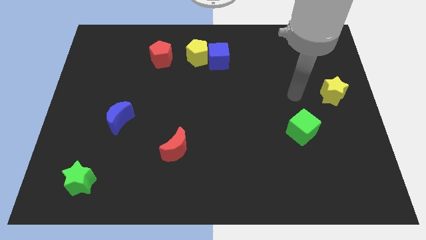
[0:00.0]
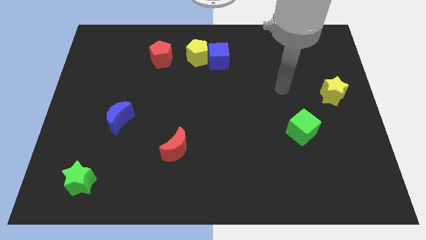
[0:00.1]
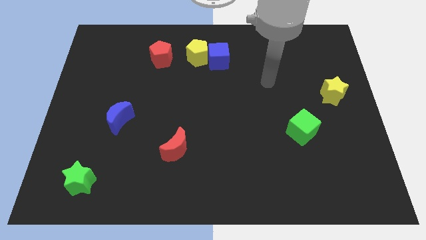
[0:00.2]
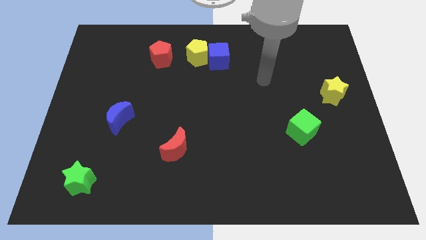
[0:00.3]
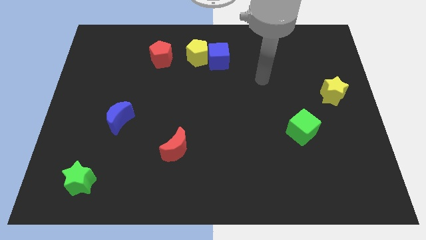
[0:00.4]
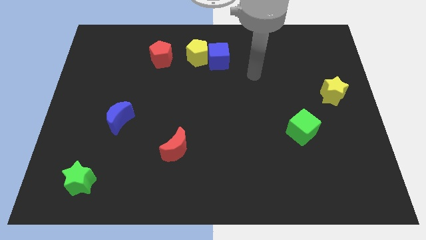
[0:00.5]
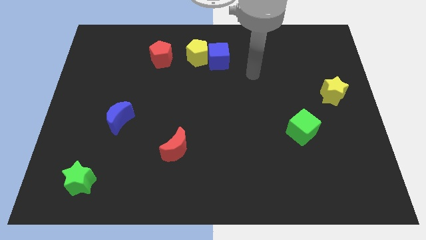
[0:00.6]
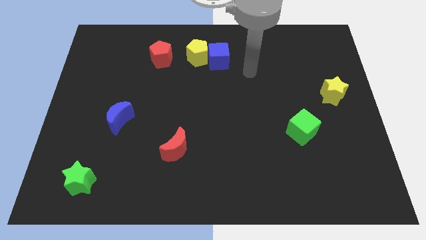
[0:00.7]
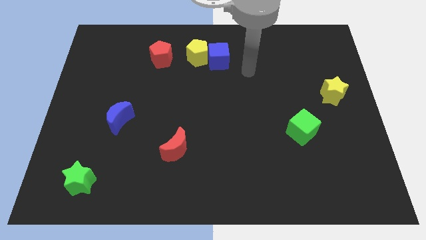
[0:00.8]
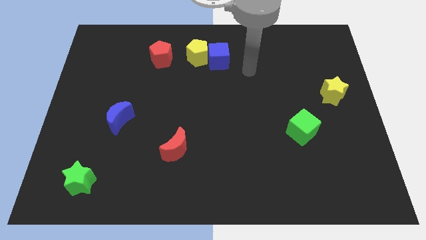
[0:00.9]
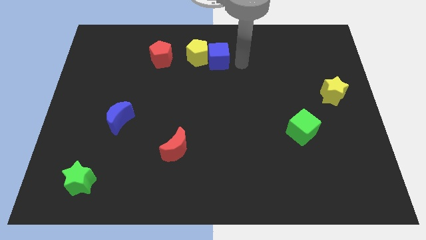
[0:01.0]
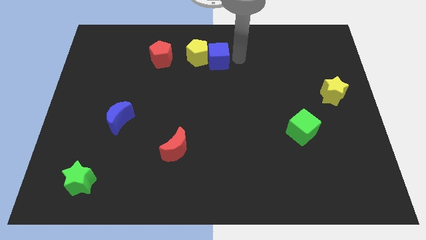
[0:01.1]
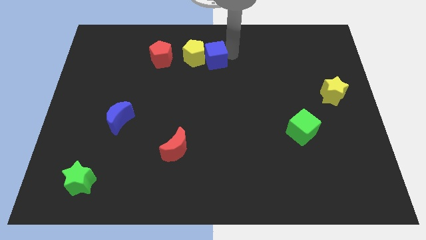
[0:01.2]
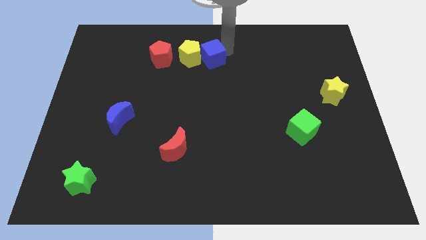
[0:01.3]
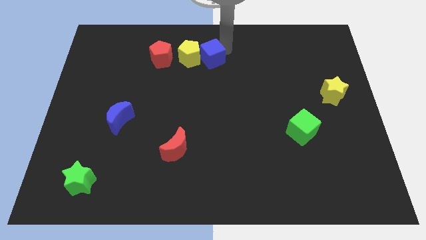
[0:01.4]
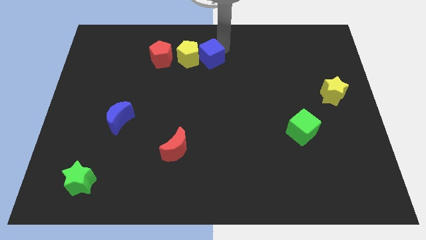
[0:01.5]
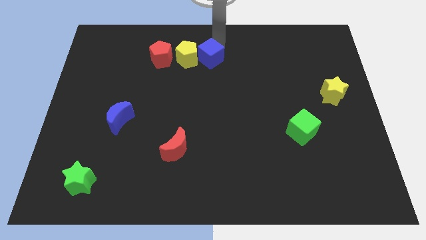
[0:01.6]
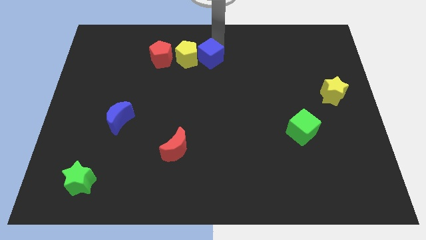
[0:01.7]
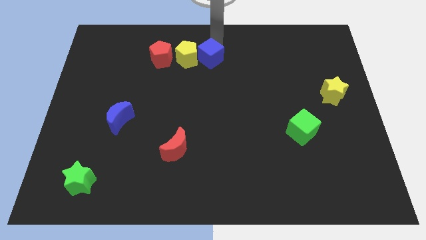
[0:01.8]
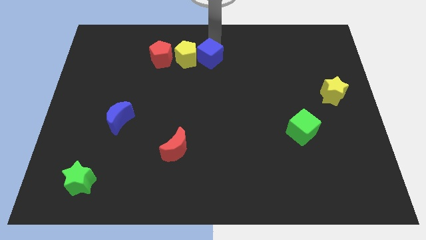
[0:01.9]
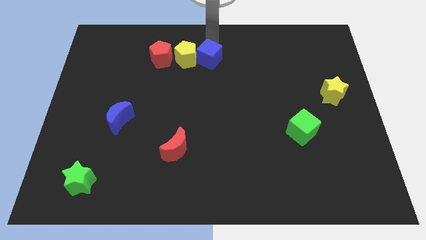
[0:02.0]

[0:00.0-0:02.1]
push blue cube close to yellow pentagon

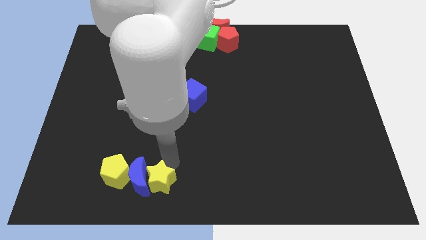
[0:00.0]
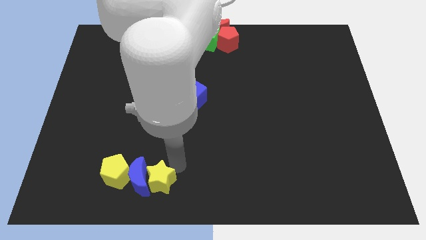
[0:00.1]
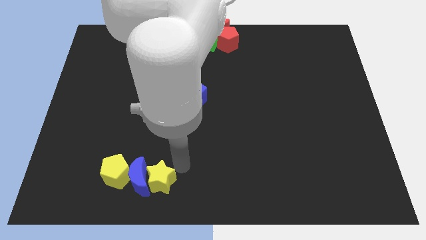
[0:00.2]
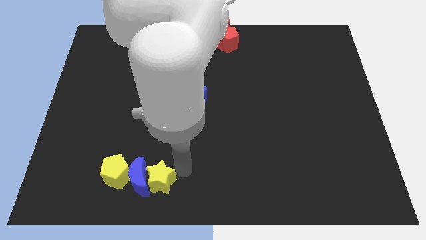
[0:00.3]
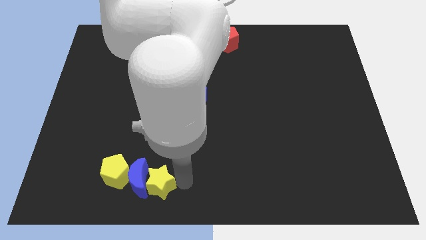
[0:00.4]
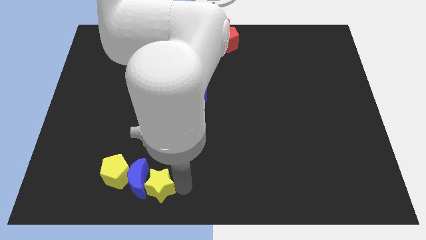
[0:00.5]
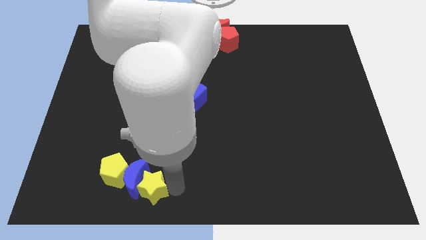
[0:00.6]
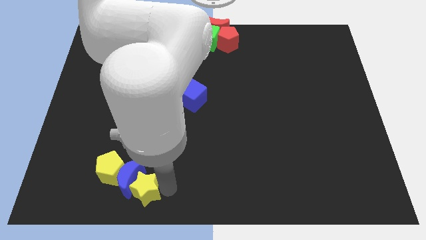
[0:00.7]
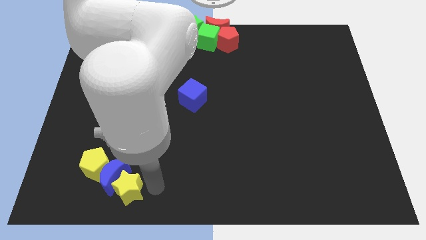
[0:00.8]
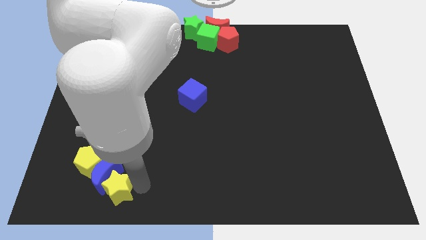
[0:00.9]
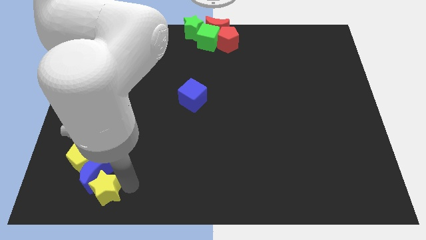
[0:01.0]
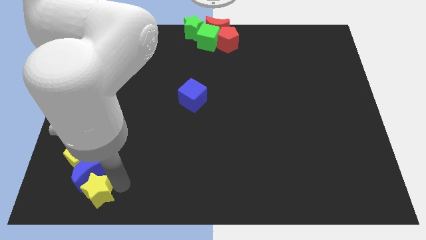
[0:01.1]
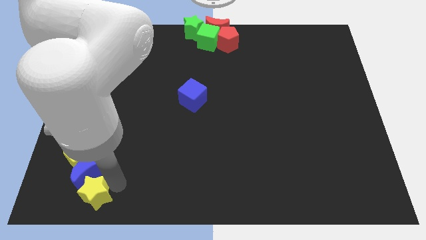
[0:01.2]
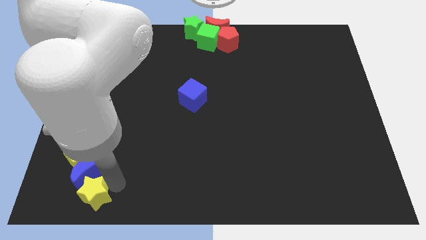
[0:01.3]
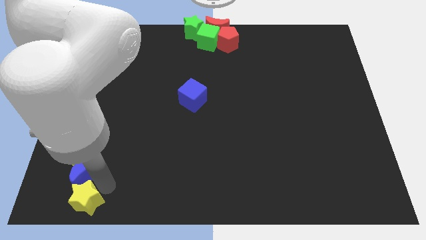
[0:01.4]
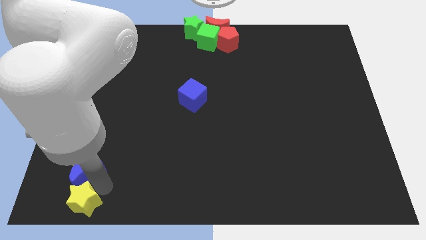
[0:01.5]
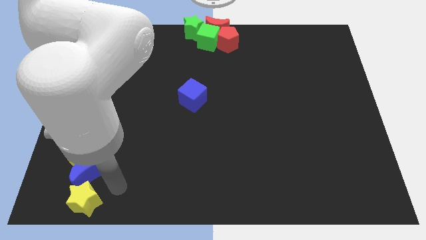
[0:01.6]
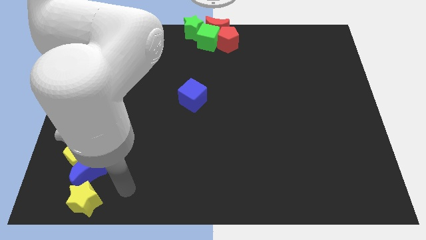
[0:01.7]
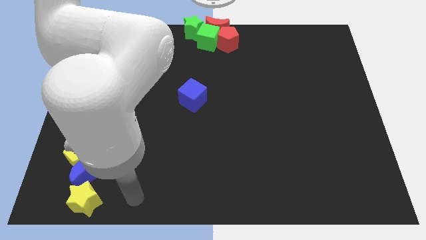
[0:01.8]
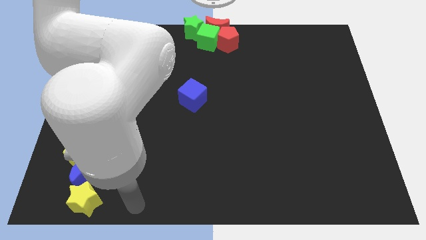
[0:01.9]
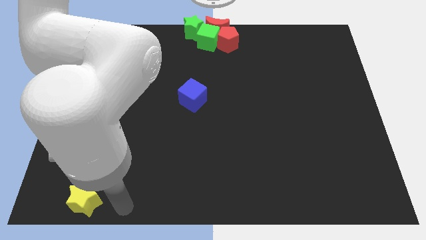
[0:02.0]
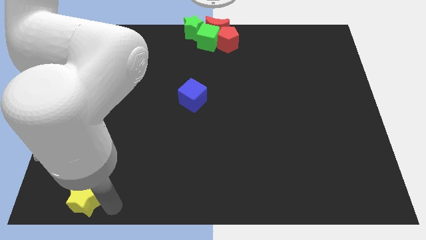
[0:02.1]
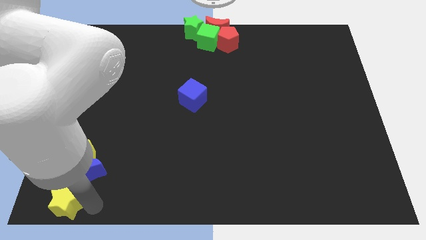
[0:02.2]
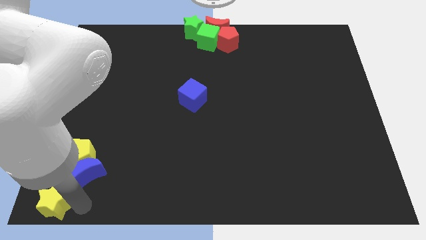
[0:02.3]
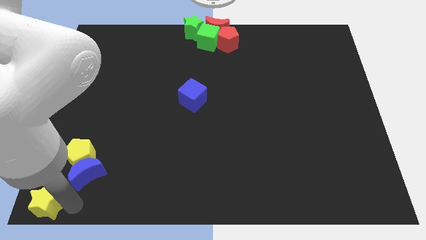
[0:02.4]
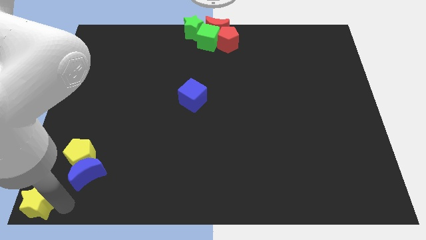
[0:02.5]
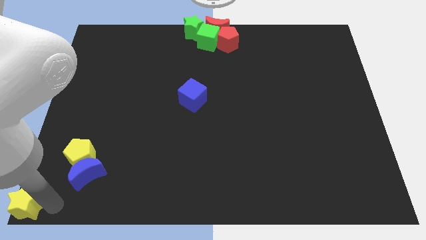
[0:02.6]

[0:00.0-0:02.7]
place yellow star to the bottom left of the board

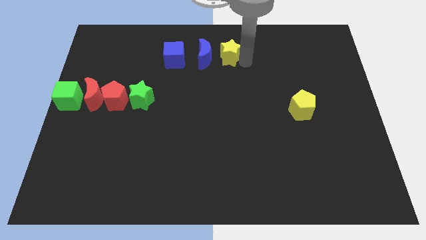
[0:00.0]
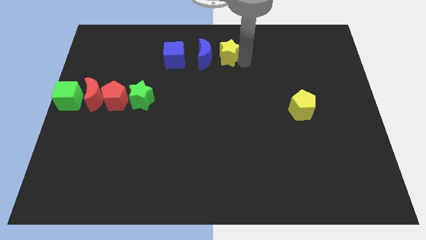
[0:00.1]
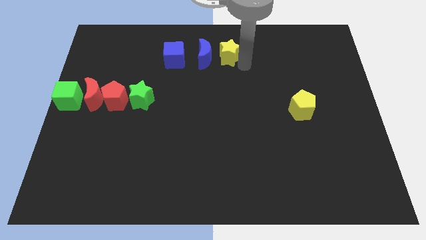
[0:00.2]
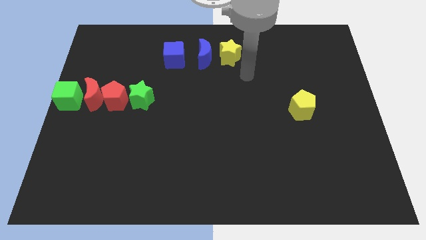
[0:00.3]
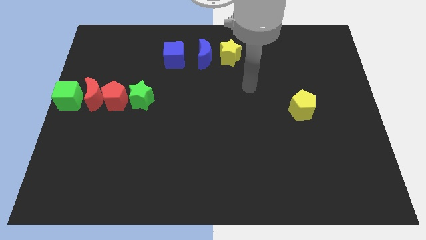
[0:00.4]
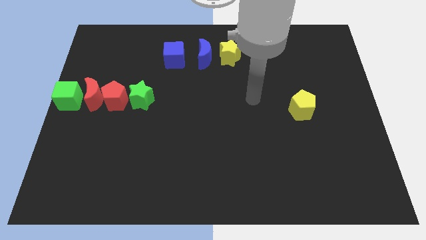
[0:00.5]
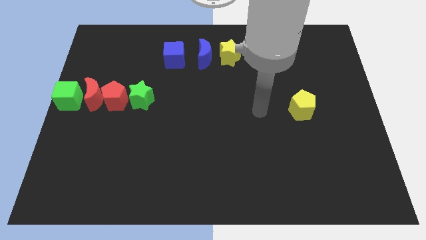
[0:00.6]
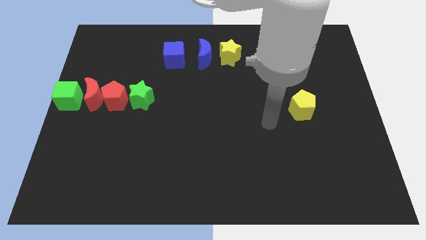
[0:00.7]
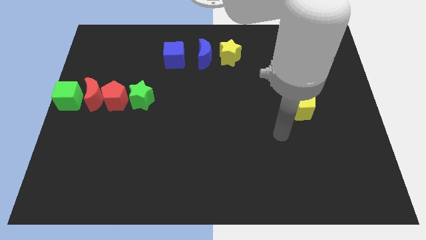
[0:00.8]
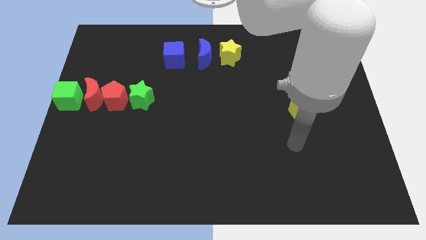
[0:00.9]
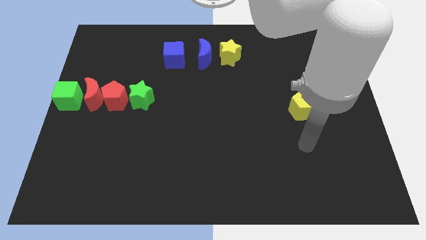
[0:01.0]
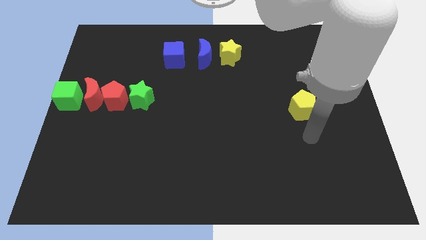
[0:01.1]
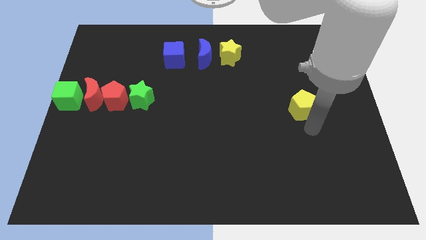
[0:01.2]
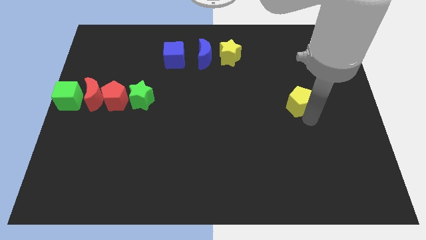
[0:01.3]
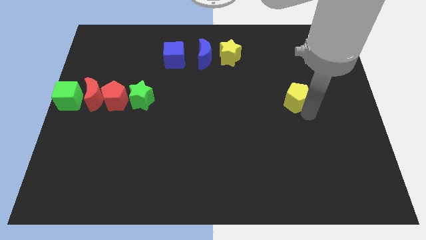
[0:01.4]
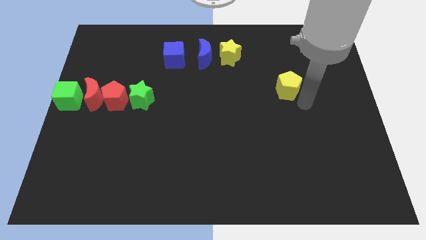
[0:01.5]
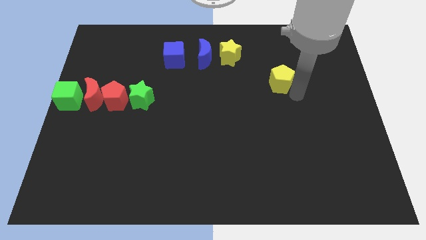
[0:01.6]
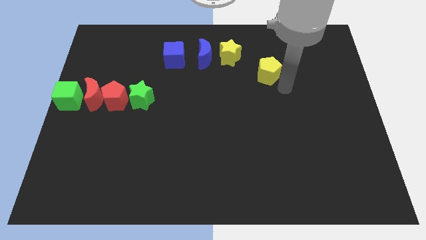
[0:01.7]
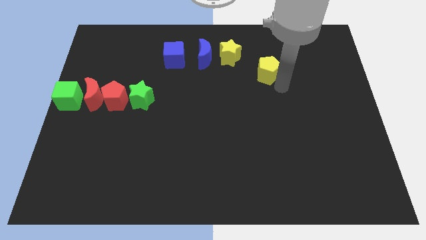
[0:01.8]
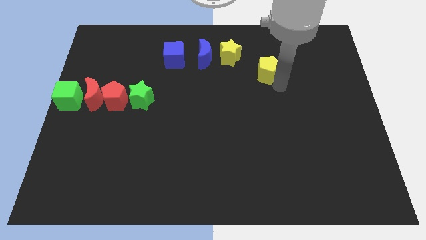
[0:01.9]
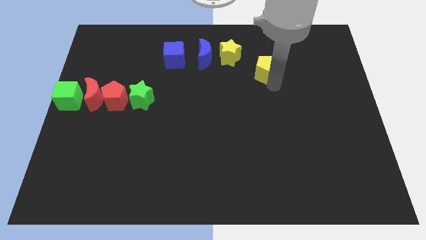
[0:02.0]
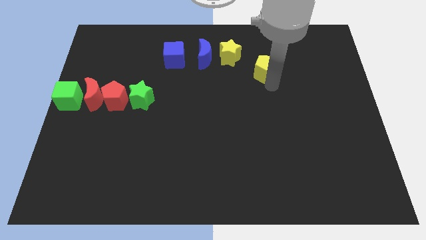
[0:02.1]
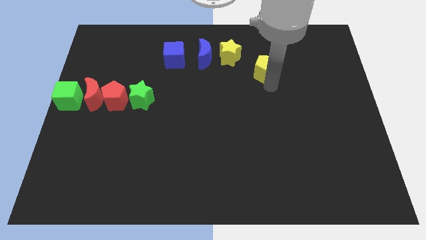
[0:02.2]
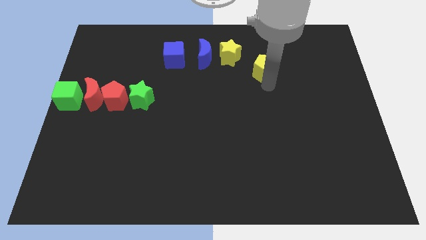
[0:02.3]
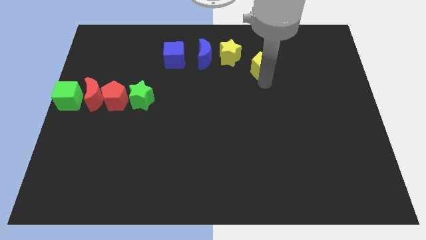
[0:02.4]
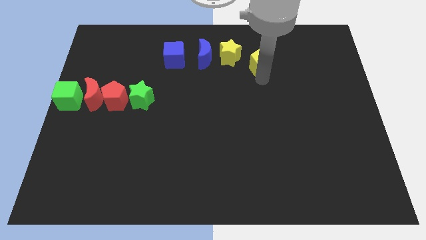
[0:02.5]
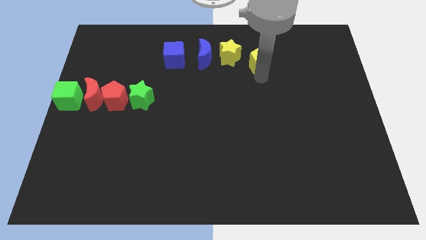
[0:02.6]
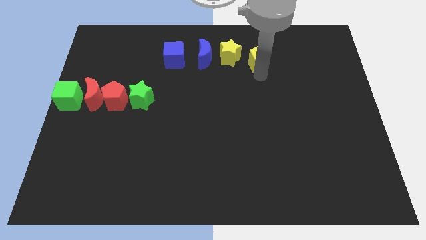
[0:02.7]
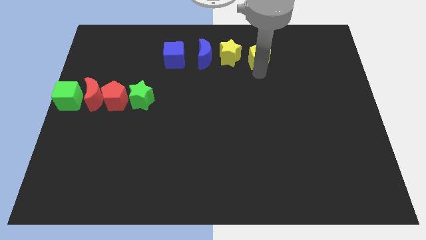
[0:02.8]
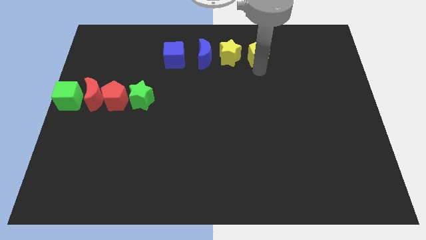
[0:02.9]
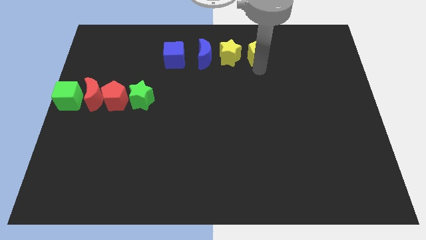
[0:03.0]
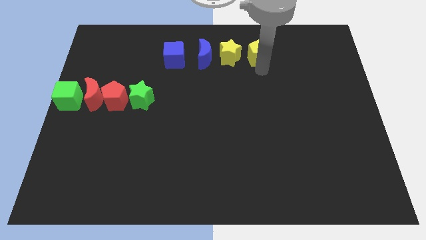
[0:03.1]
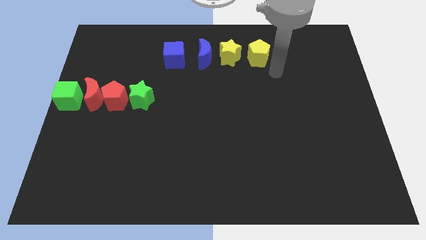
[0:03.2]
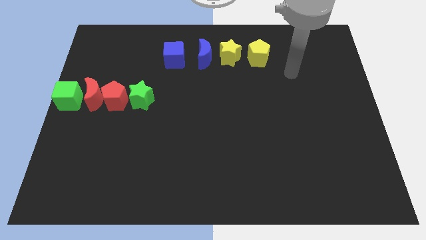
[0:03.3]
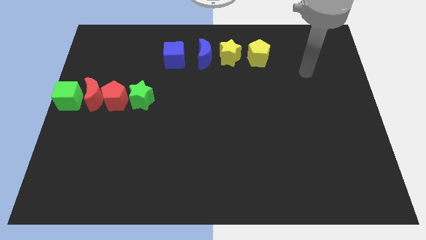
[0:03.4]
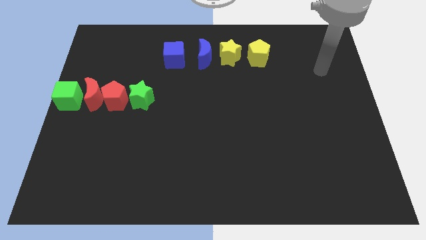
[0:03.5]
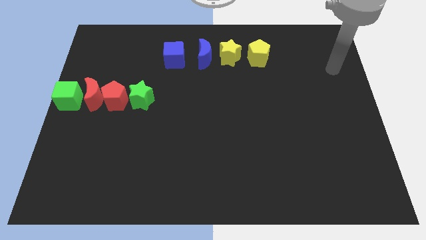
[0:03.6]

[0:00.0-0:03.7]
move the yellow pentagon right beside yellow star

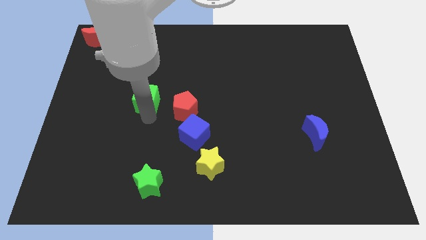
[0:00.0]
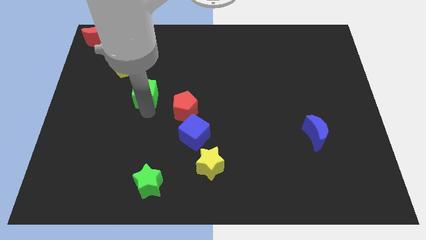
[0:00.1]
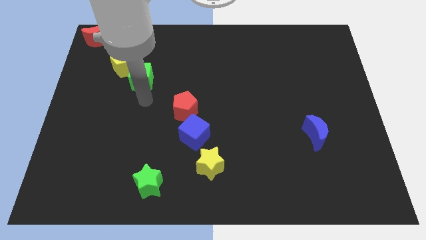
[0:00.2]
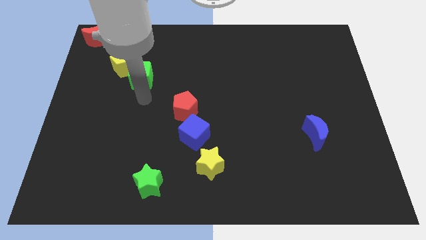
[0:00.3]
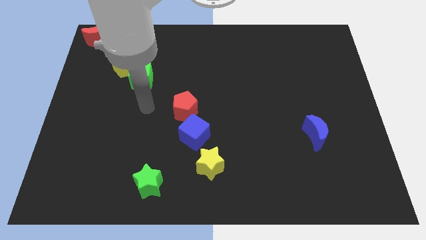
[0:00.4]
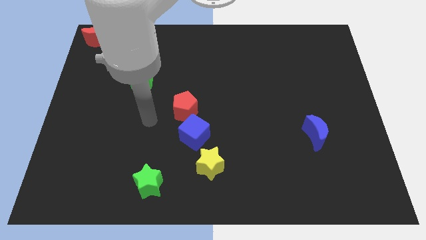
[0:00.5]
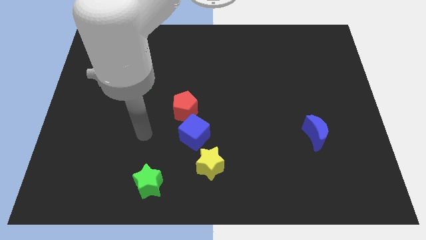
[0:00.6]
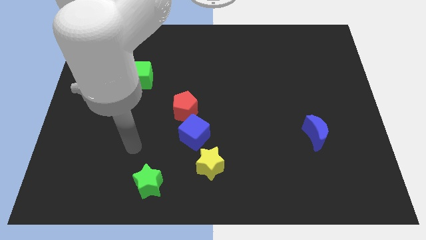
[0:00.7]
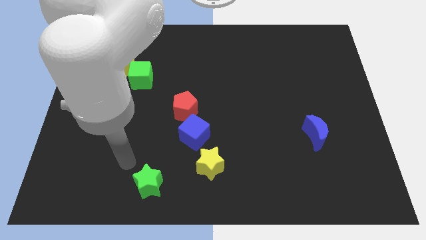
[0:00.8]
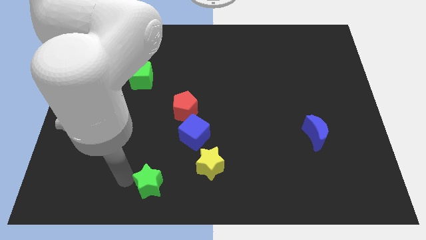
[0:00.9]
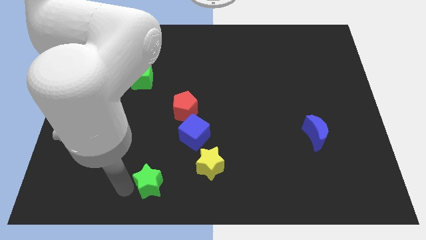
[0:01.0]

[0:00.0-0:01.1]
push green cube towards yellow pentagon
